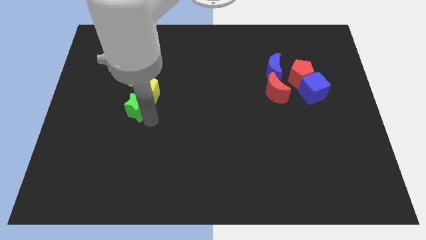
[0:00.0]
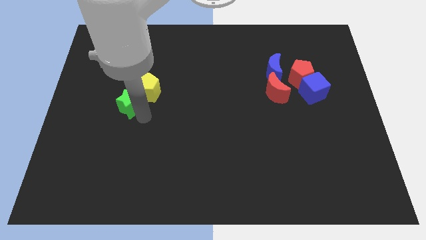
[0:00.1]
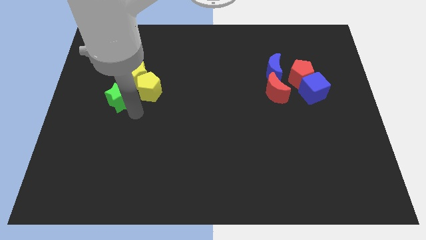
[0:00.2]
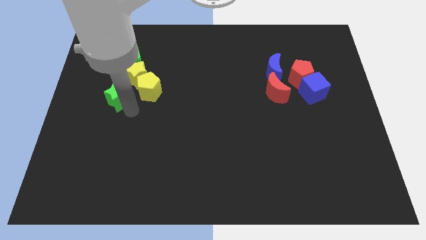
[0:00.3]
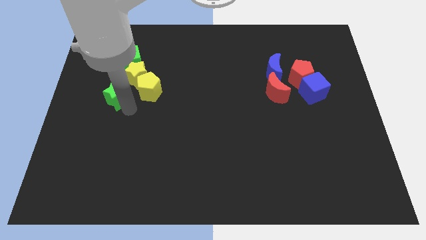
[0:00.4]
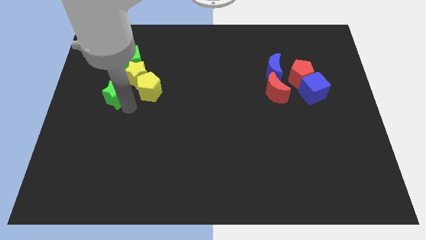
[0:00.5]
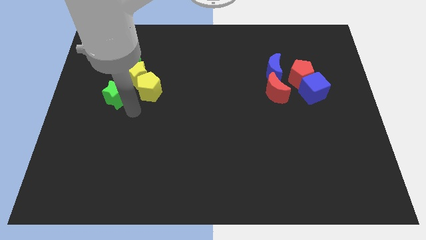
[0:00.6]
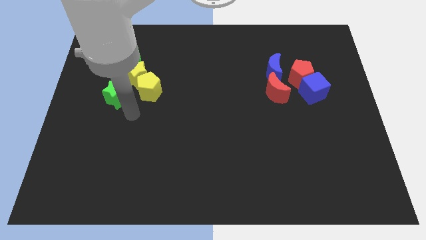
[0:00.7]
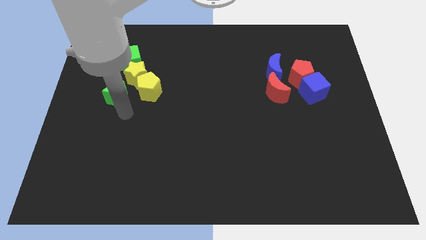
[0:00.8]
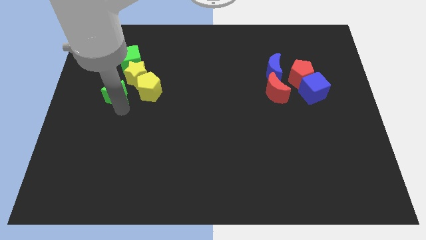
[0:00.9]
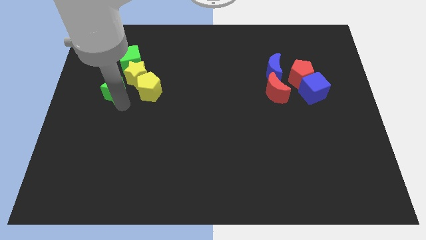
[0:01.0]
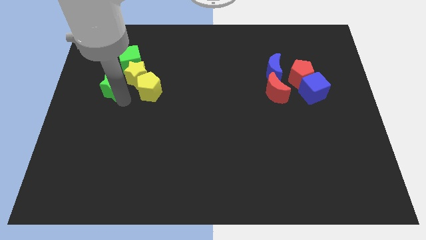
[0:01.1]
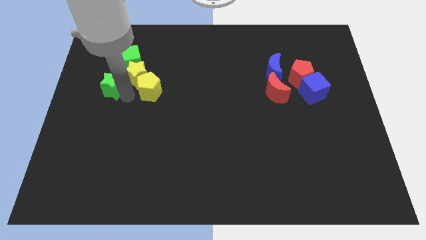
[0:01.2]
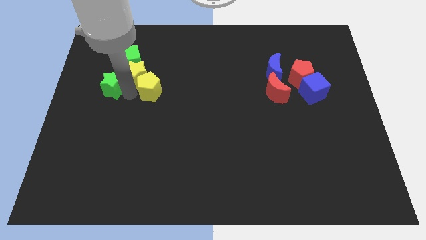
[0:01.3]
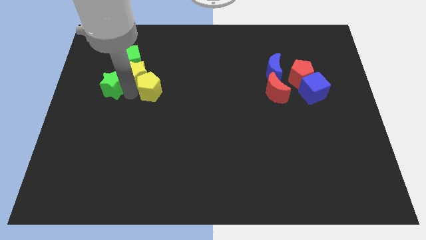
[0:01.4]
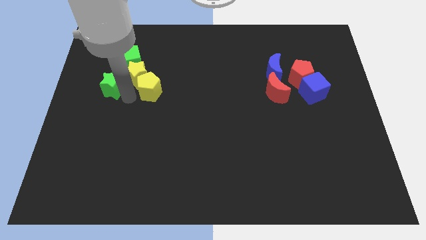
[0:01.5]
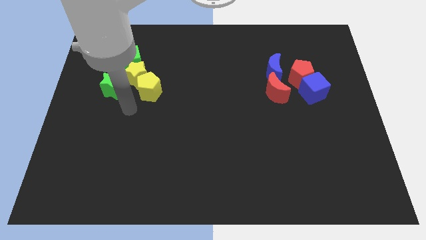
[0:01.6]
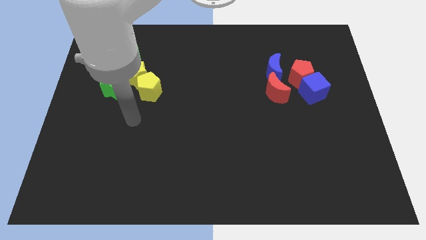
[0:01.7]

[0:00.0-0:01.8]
move the green star left beside the yellow star

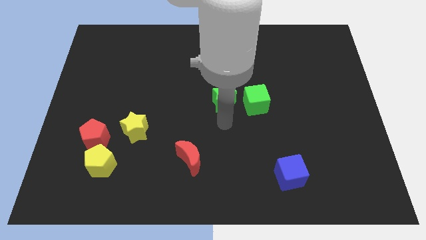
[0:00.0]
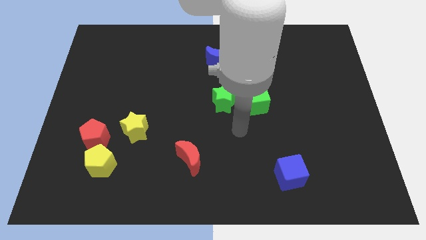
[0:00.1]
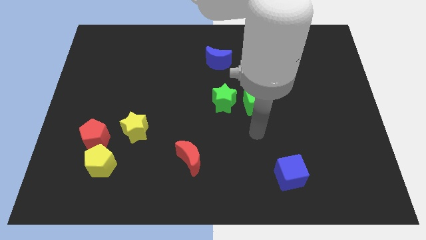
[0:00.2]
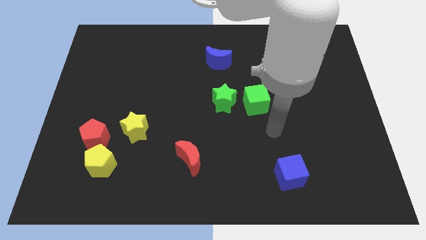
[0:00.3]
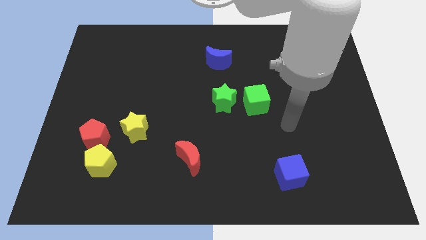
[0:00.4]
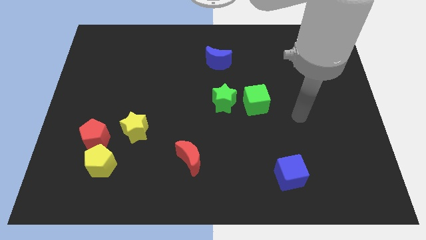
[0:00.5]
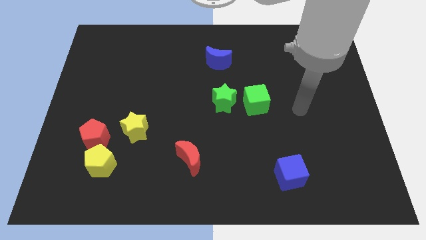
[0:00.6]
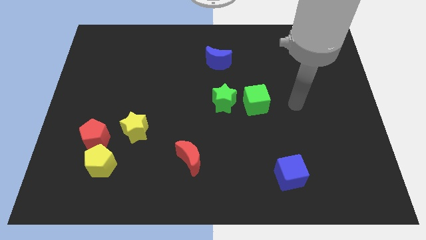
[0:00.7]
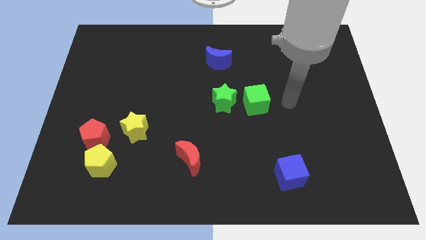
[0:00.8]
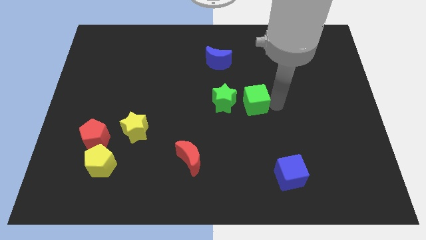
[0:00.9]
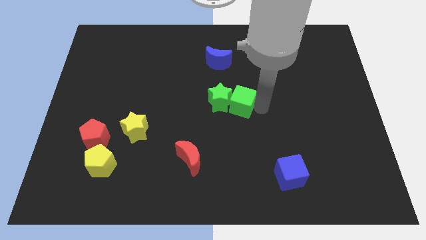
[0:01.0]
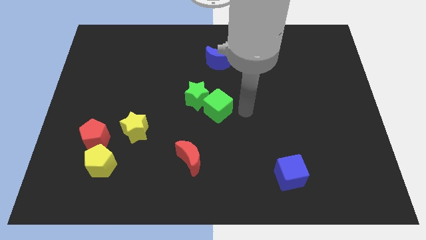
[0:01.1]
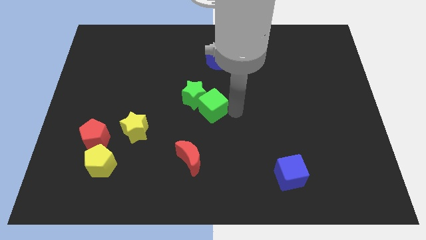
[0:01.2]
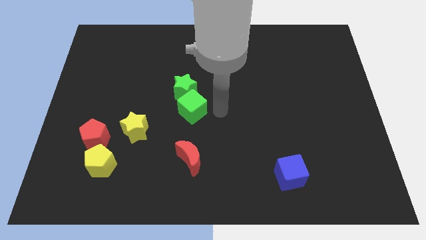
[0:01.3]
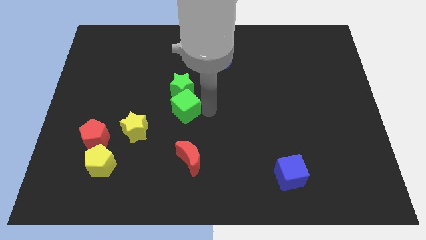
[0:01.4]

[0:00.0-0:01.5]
move the green cube into green star

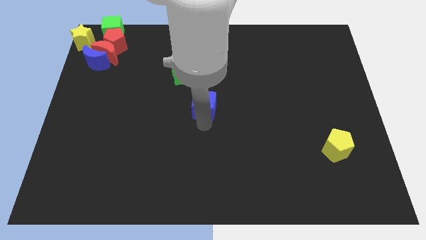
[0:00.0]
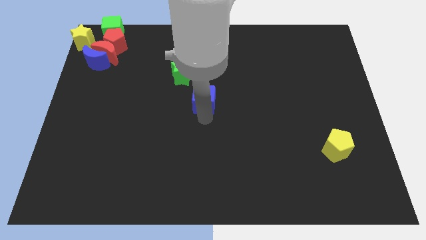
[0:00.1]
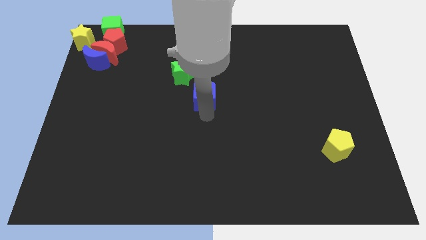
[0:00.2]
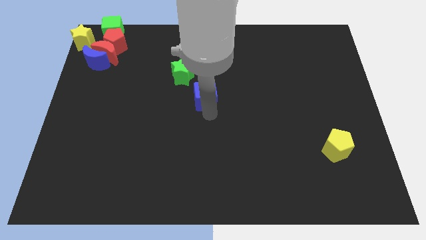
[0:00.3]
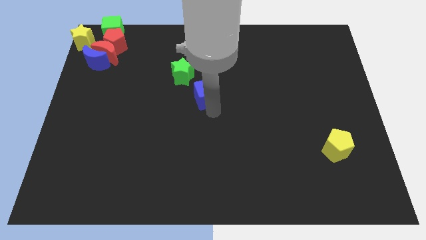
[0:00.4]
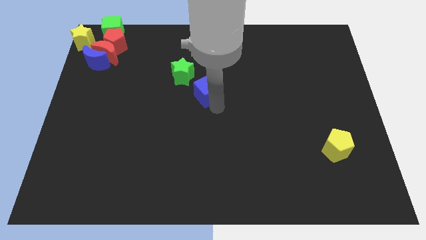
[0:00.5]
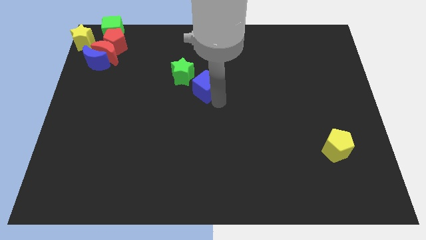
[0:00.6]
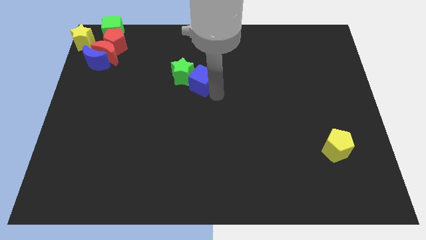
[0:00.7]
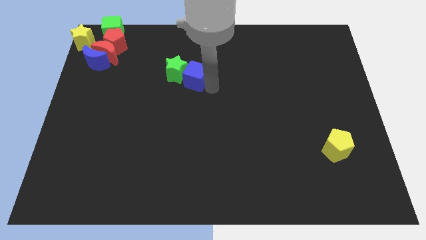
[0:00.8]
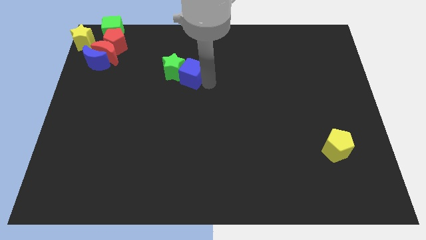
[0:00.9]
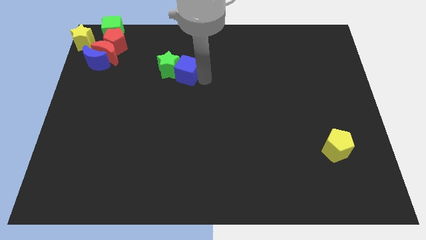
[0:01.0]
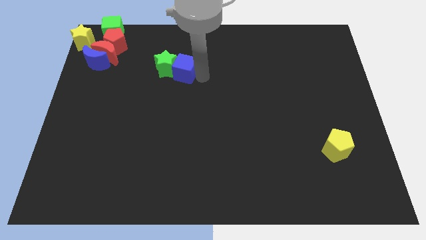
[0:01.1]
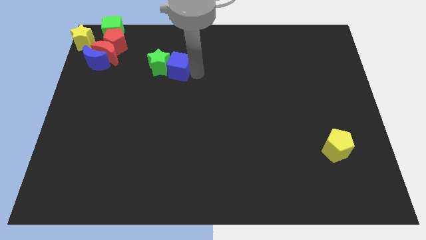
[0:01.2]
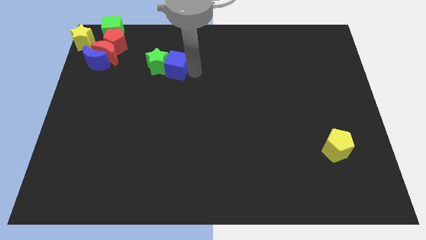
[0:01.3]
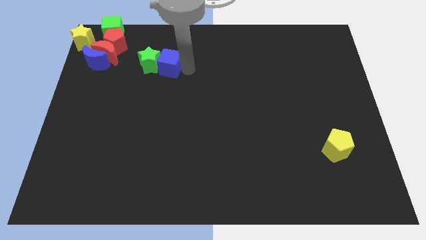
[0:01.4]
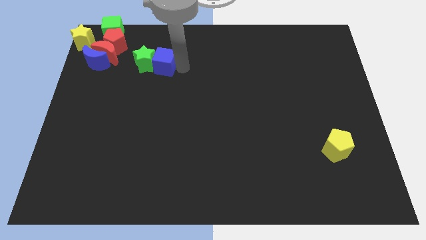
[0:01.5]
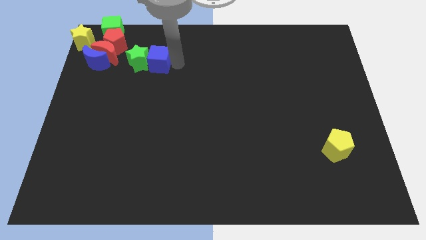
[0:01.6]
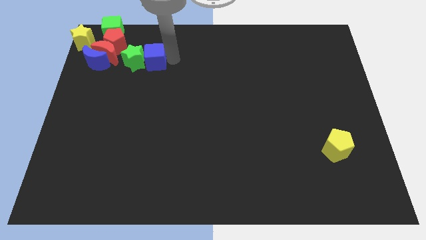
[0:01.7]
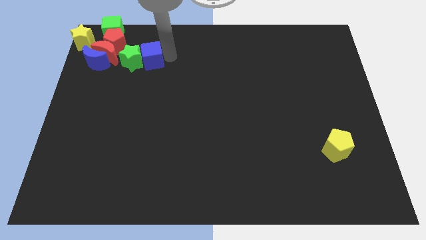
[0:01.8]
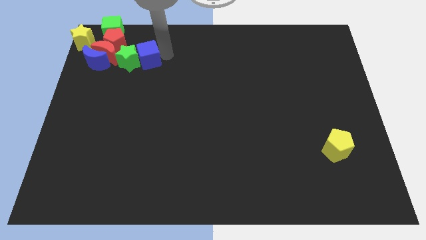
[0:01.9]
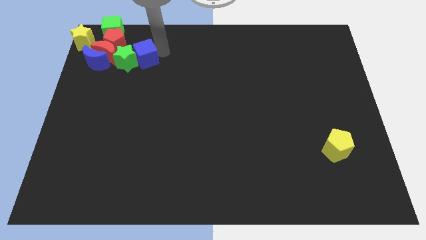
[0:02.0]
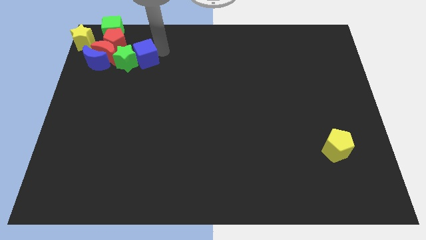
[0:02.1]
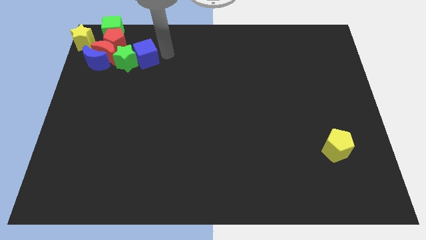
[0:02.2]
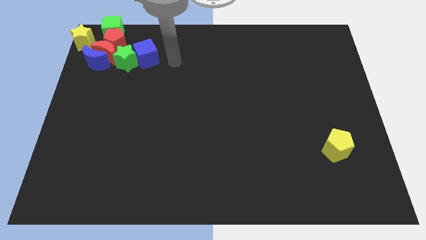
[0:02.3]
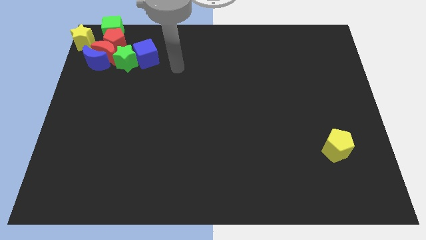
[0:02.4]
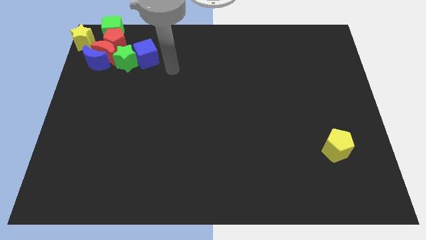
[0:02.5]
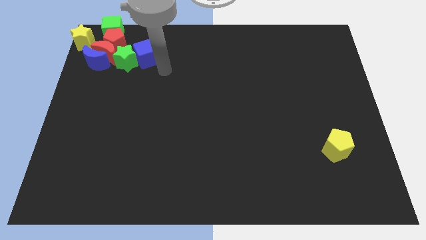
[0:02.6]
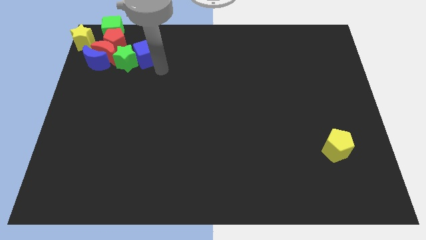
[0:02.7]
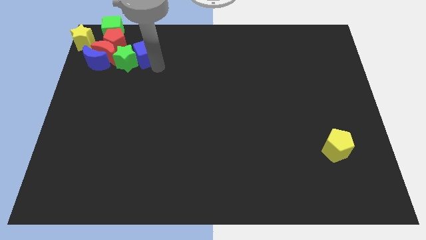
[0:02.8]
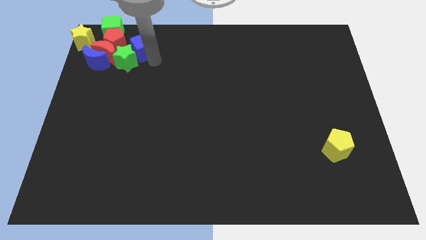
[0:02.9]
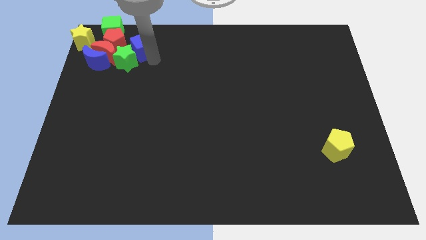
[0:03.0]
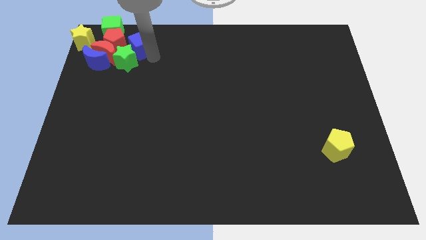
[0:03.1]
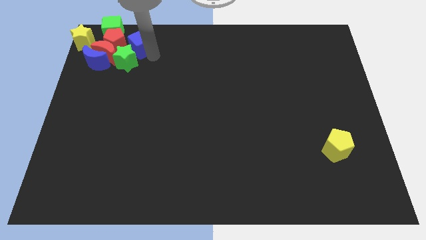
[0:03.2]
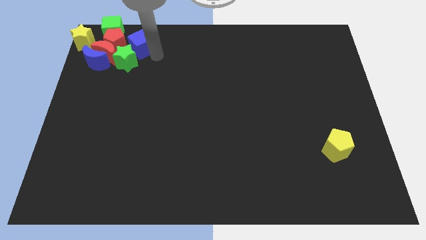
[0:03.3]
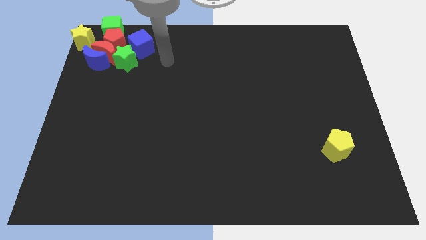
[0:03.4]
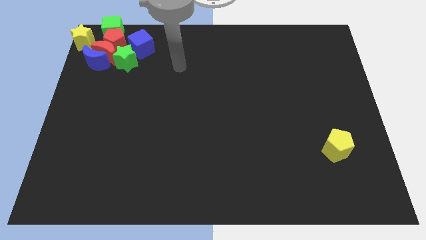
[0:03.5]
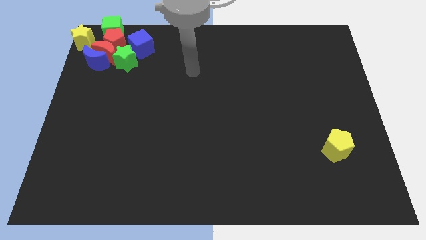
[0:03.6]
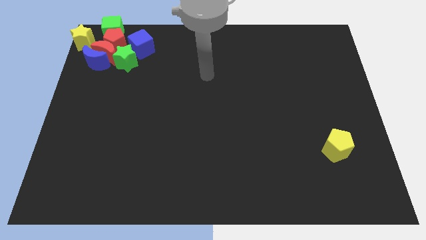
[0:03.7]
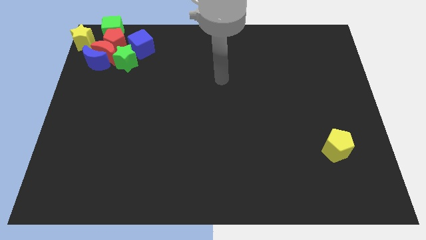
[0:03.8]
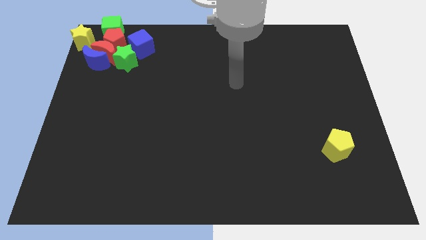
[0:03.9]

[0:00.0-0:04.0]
push the both green star and blue cube into the group of blocks

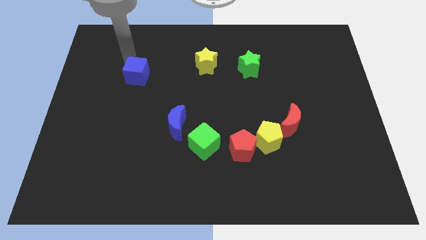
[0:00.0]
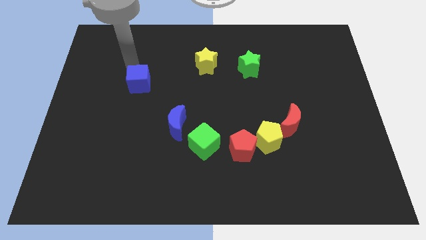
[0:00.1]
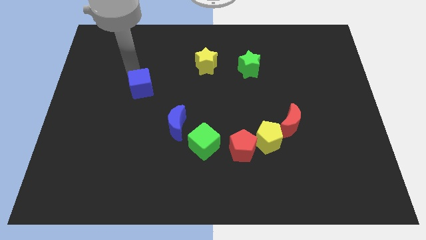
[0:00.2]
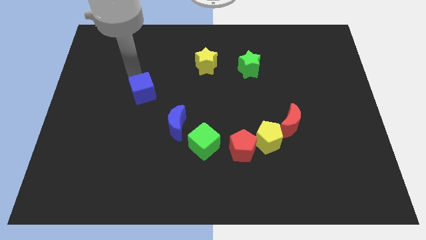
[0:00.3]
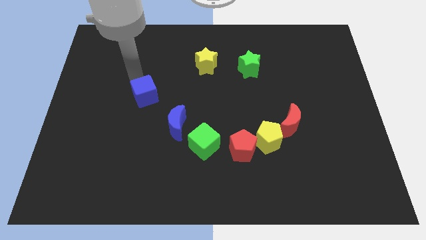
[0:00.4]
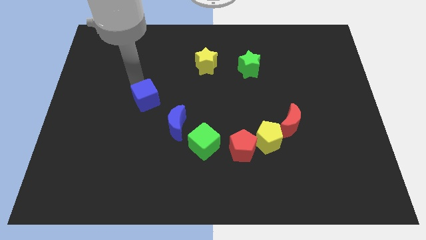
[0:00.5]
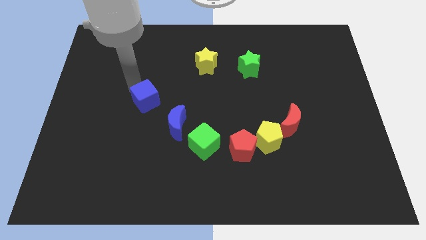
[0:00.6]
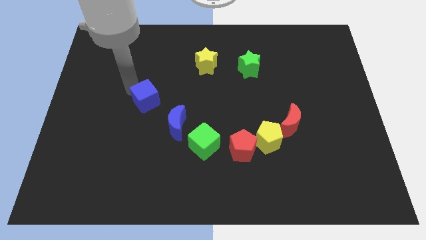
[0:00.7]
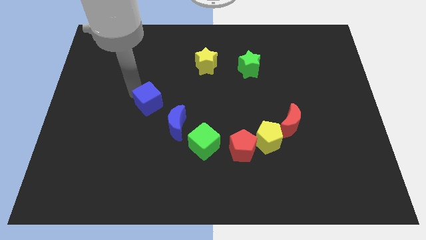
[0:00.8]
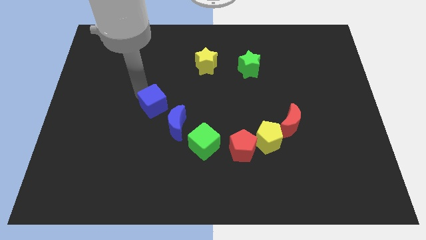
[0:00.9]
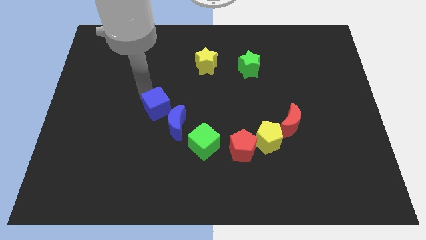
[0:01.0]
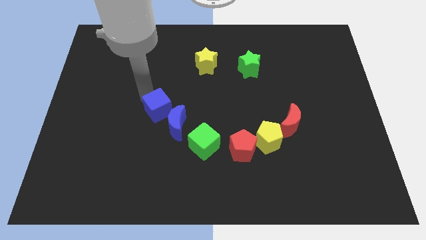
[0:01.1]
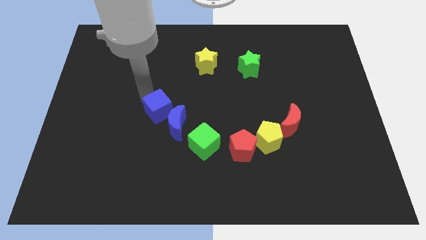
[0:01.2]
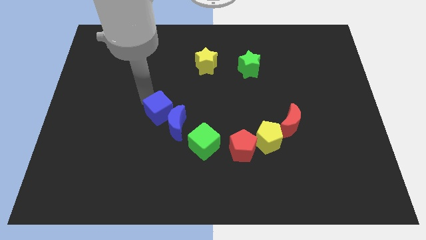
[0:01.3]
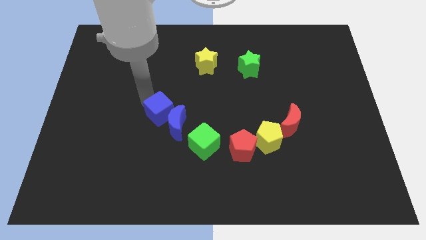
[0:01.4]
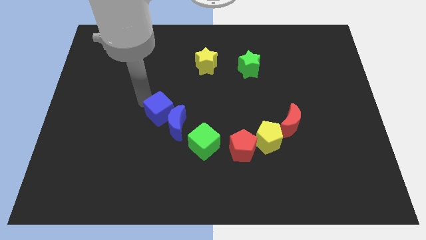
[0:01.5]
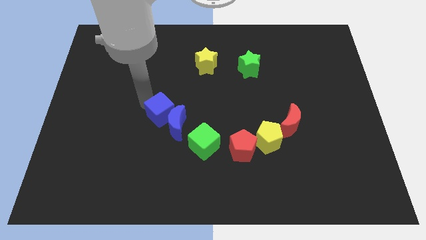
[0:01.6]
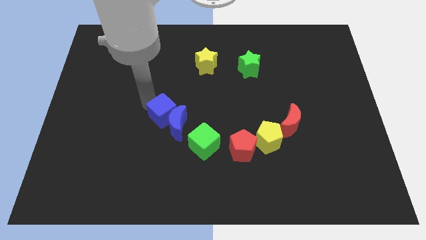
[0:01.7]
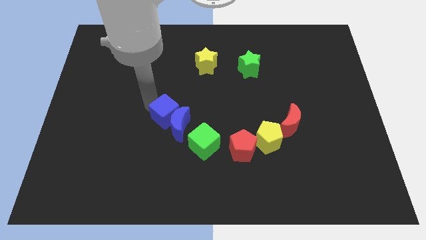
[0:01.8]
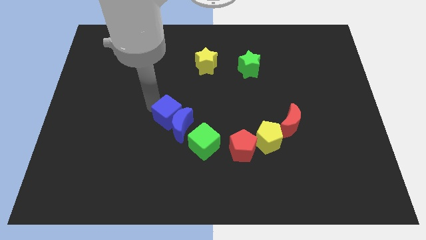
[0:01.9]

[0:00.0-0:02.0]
move the blue cube into the blue moon
